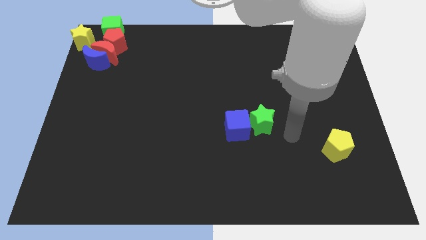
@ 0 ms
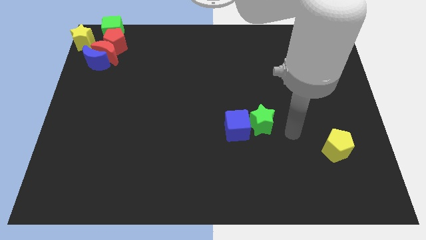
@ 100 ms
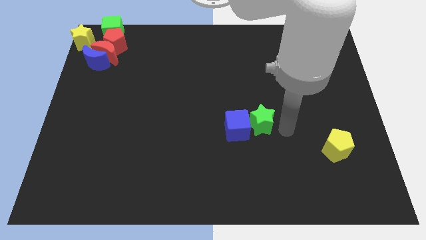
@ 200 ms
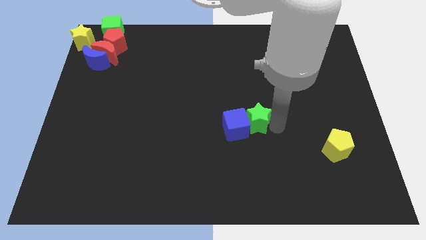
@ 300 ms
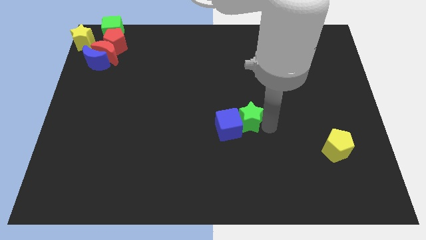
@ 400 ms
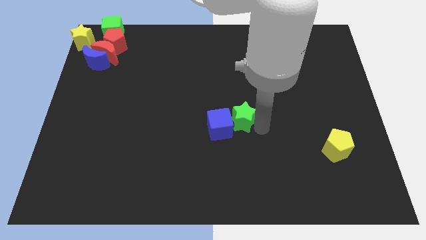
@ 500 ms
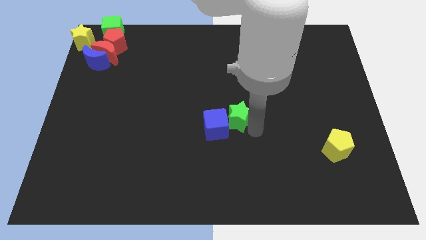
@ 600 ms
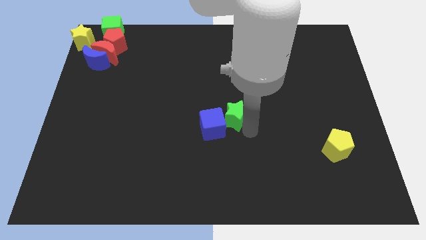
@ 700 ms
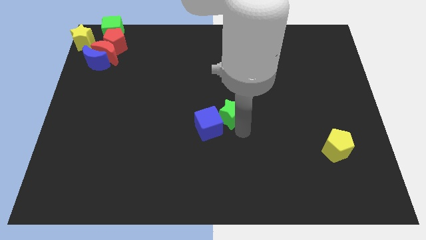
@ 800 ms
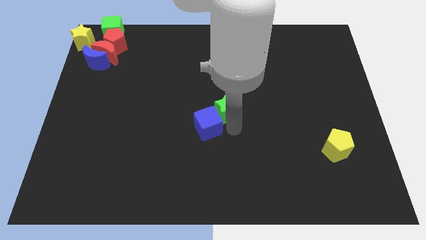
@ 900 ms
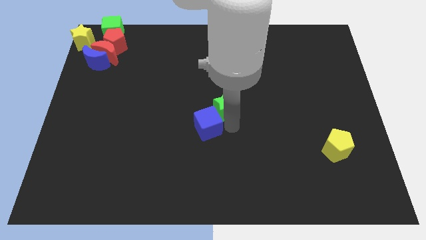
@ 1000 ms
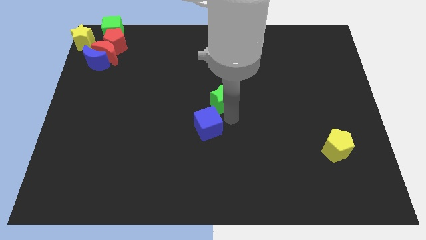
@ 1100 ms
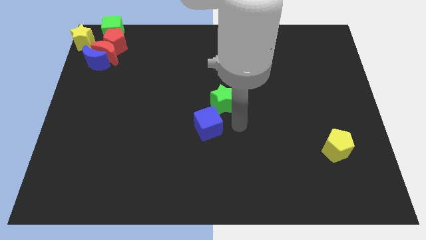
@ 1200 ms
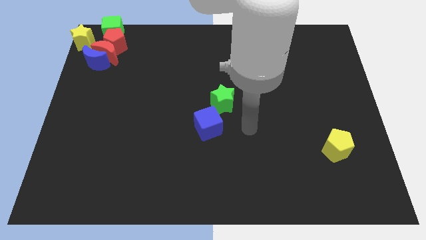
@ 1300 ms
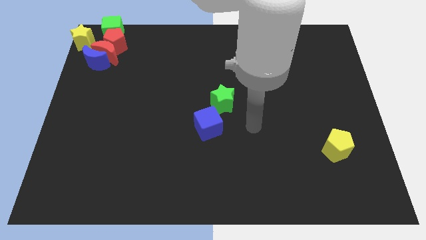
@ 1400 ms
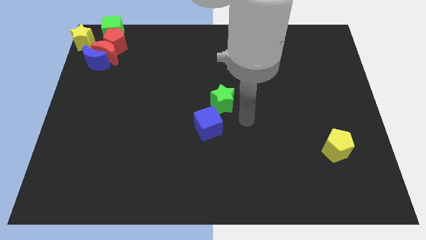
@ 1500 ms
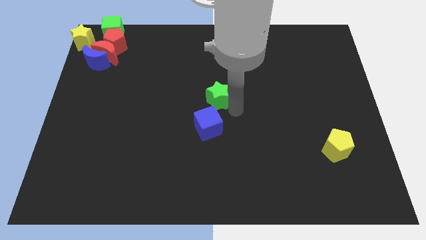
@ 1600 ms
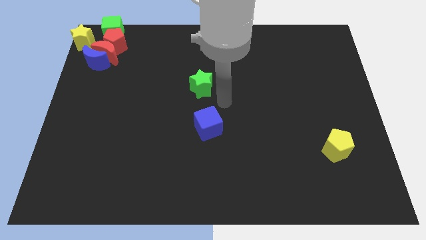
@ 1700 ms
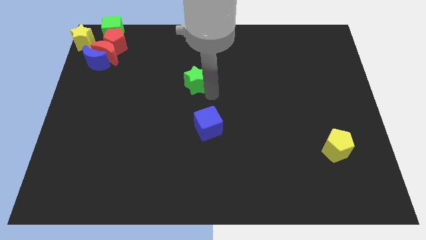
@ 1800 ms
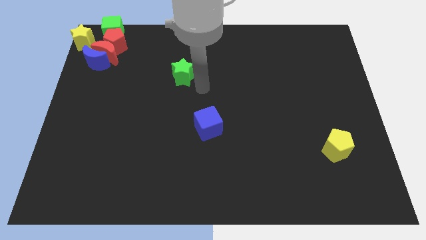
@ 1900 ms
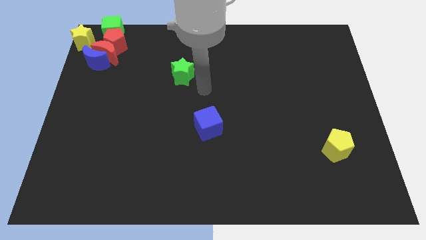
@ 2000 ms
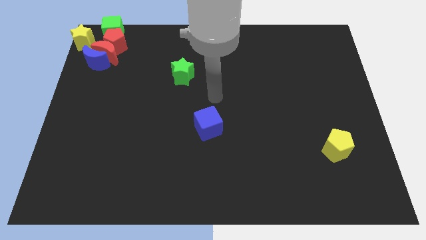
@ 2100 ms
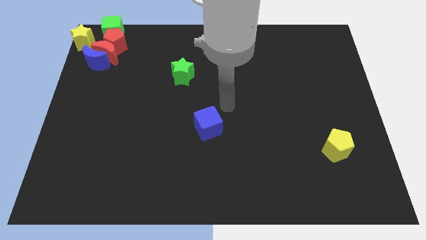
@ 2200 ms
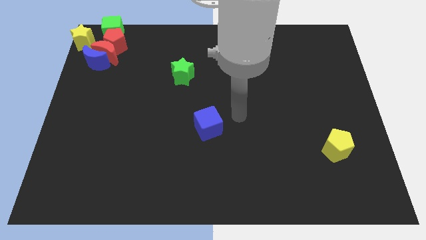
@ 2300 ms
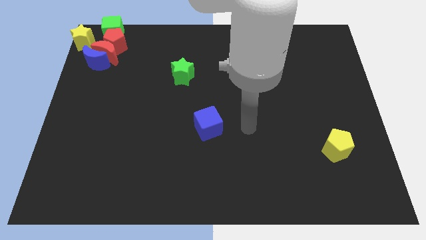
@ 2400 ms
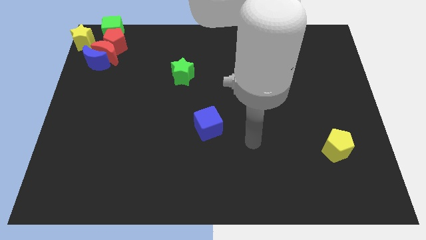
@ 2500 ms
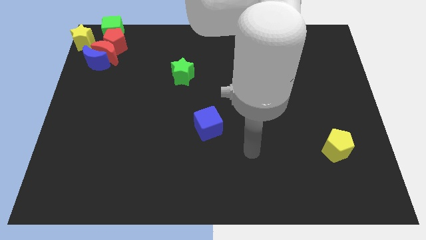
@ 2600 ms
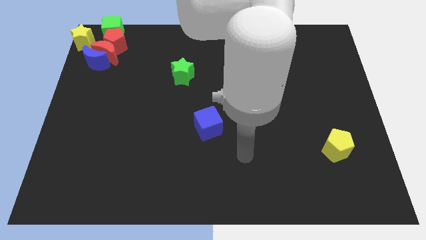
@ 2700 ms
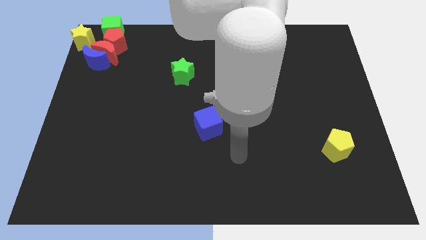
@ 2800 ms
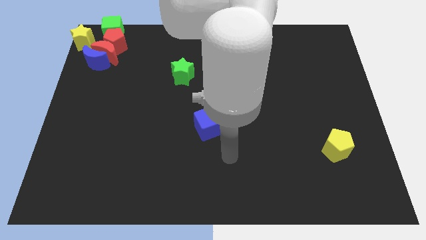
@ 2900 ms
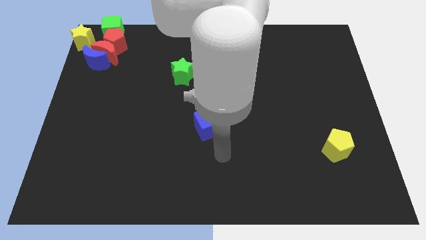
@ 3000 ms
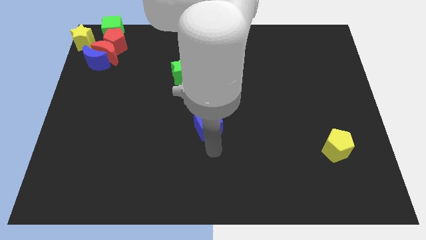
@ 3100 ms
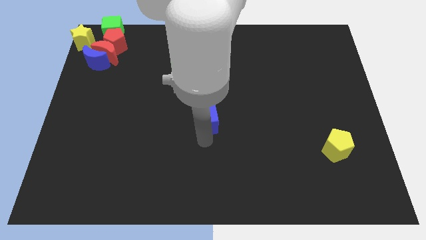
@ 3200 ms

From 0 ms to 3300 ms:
push the green star towards the top center of the board

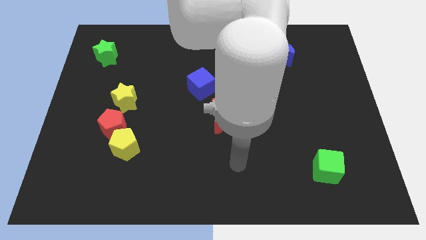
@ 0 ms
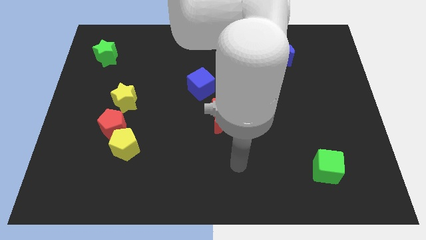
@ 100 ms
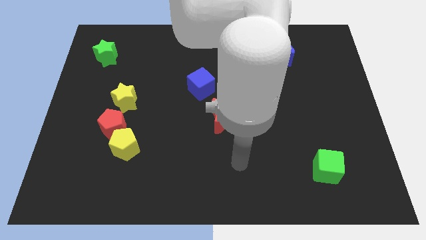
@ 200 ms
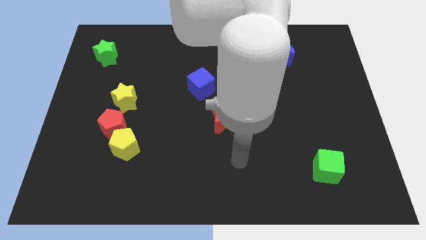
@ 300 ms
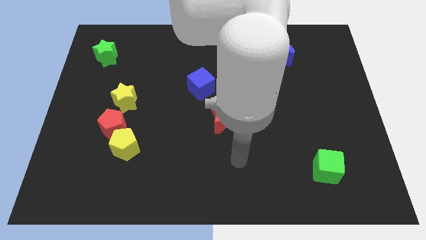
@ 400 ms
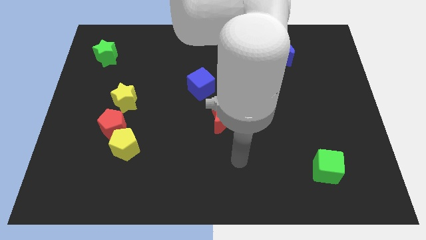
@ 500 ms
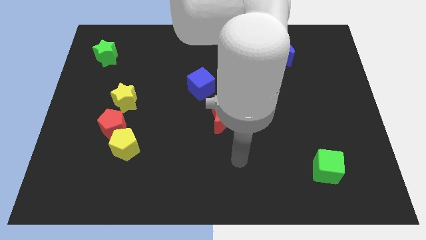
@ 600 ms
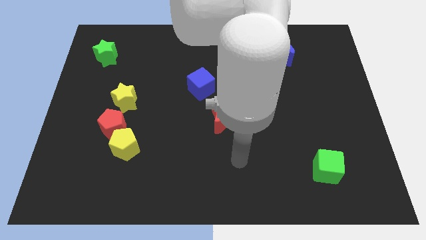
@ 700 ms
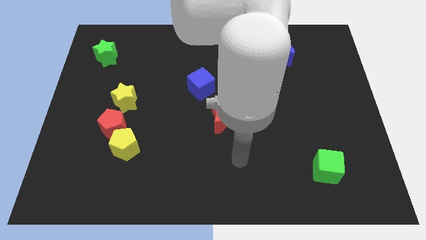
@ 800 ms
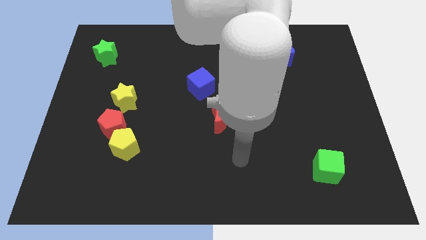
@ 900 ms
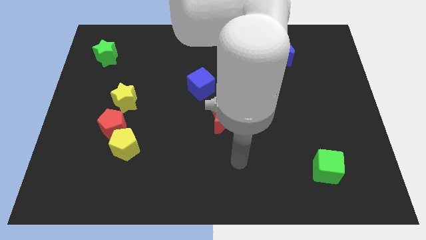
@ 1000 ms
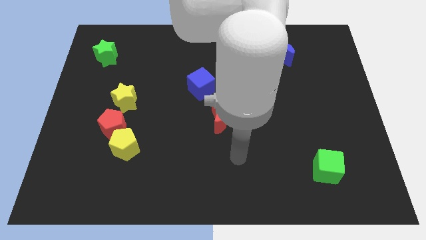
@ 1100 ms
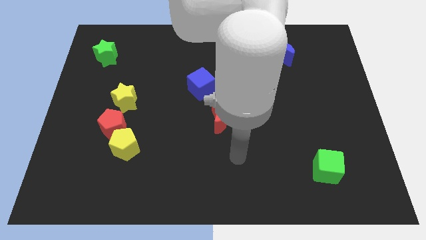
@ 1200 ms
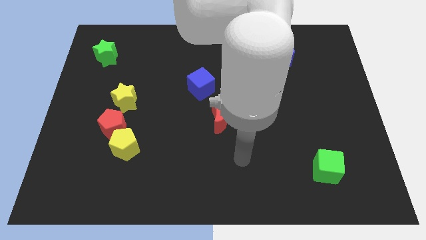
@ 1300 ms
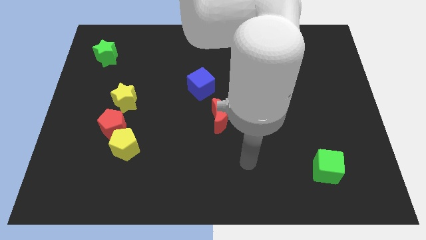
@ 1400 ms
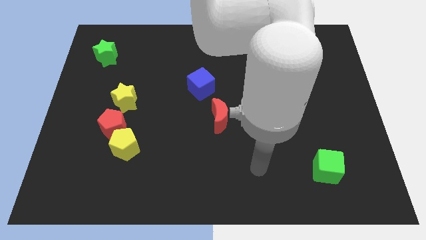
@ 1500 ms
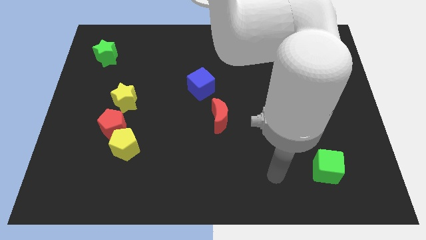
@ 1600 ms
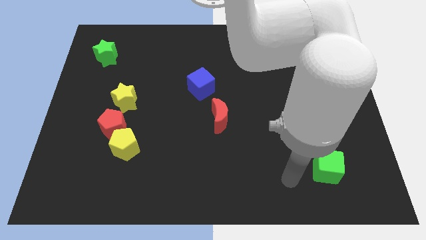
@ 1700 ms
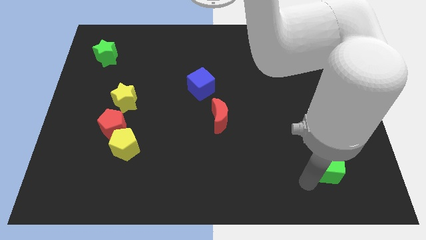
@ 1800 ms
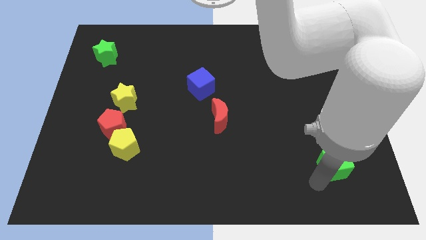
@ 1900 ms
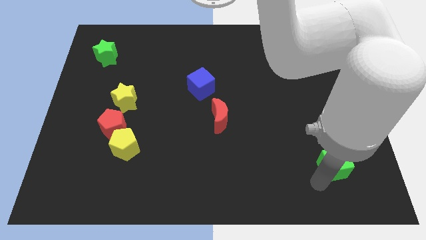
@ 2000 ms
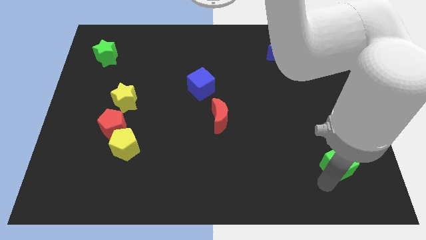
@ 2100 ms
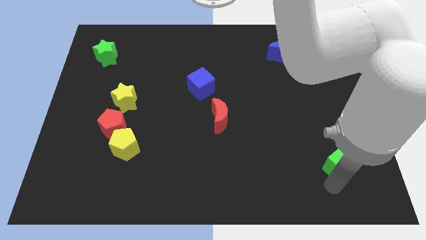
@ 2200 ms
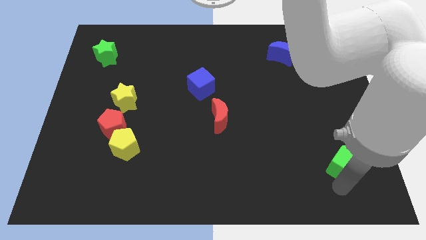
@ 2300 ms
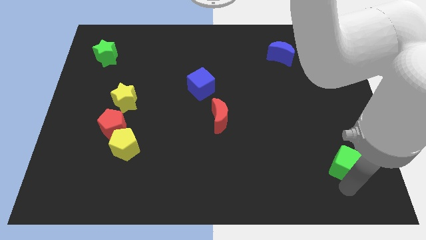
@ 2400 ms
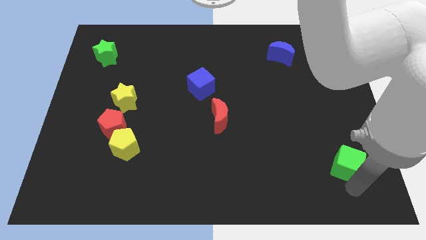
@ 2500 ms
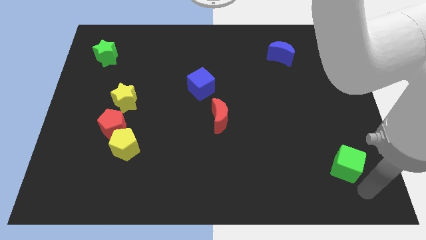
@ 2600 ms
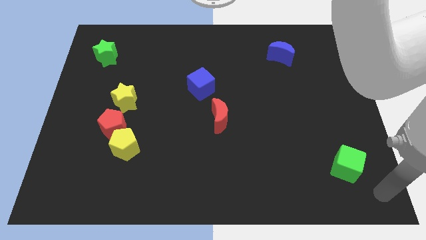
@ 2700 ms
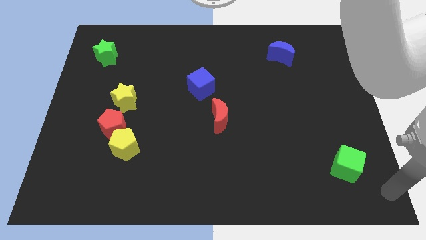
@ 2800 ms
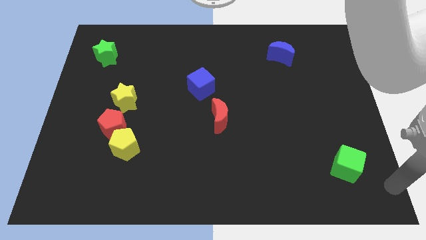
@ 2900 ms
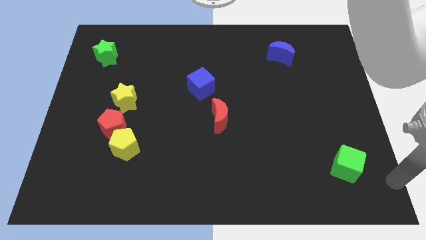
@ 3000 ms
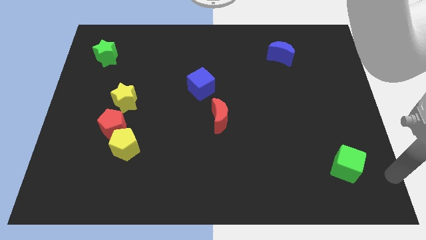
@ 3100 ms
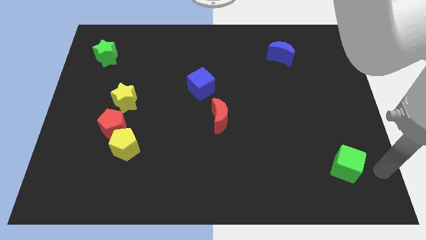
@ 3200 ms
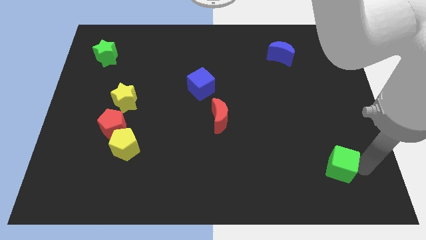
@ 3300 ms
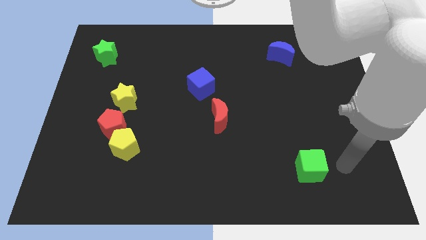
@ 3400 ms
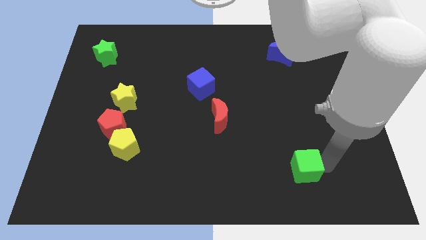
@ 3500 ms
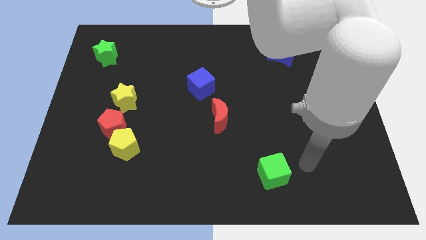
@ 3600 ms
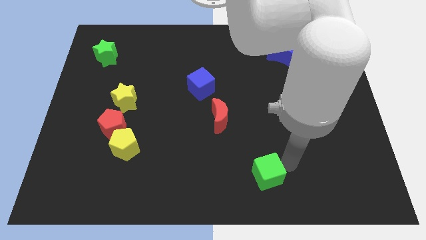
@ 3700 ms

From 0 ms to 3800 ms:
move green cube towards left side of the board

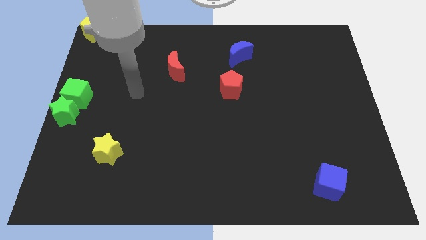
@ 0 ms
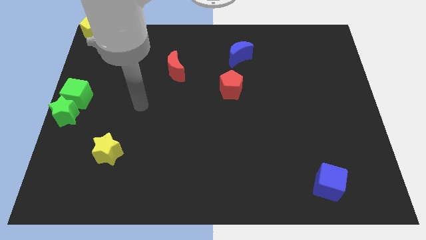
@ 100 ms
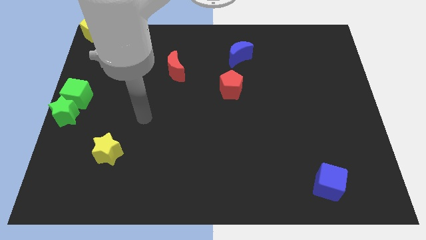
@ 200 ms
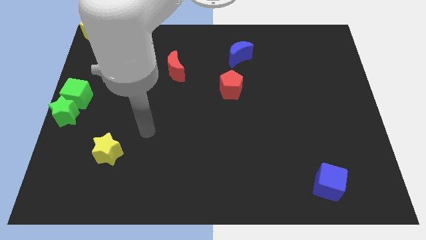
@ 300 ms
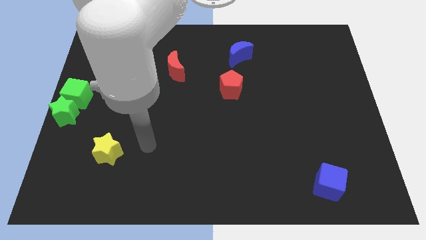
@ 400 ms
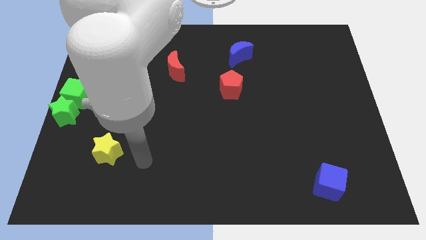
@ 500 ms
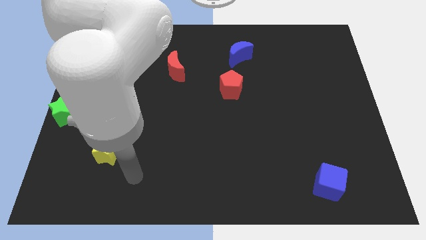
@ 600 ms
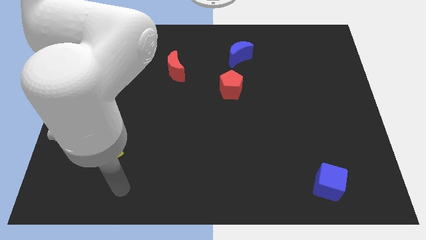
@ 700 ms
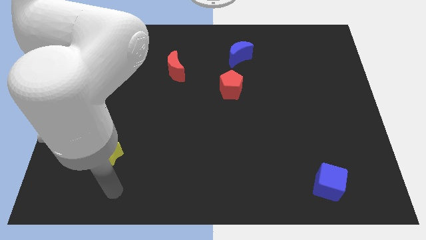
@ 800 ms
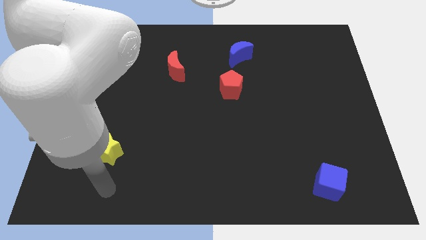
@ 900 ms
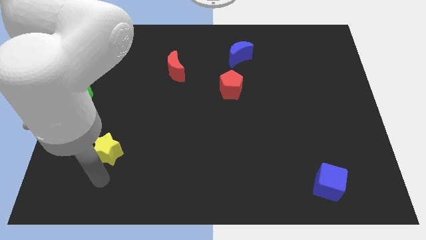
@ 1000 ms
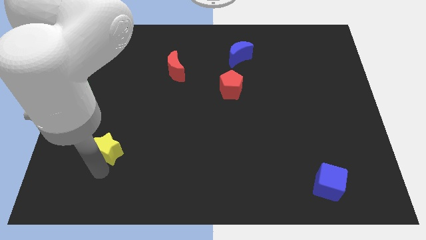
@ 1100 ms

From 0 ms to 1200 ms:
touch the yellow star

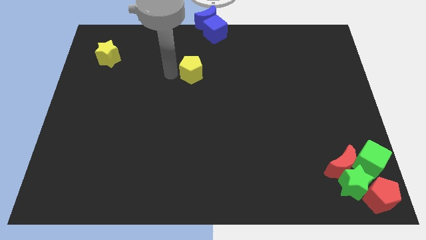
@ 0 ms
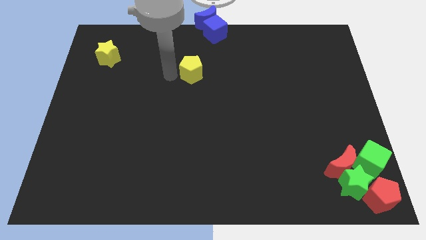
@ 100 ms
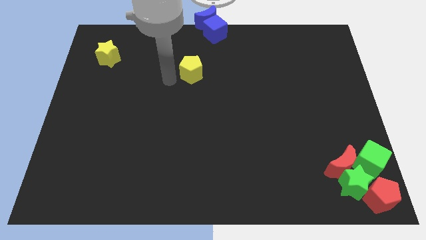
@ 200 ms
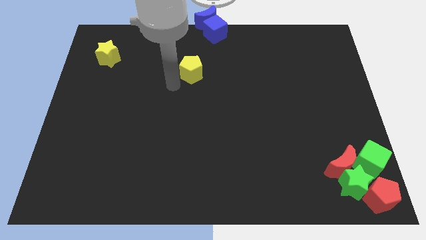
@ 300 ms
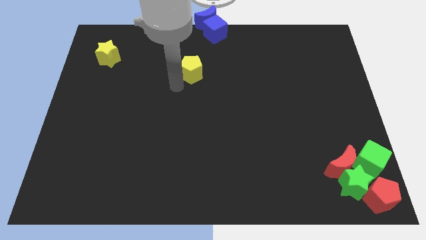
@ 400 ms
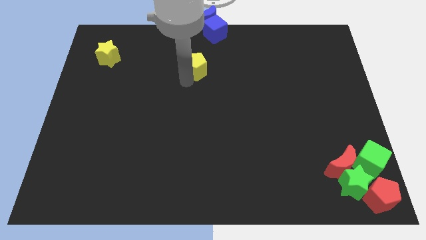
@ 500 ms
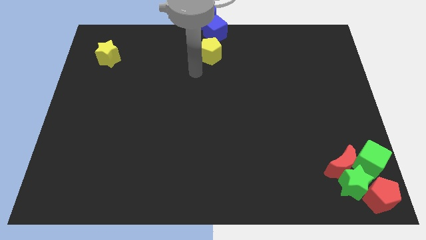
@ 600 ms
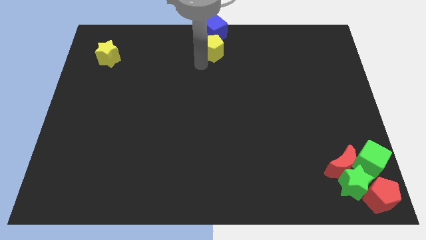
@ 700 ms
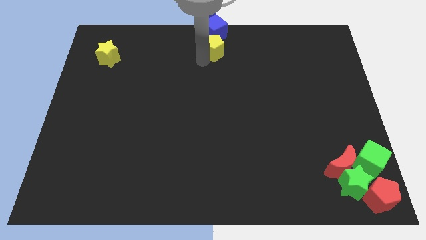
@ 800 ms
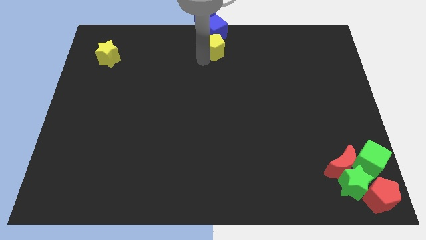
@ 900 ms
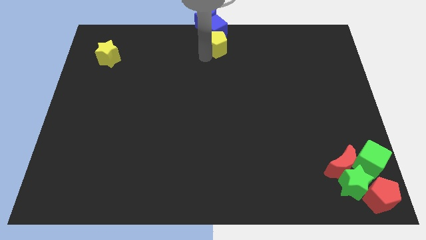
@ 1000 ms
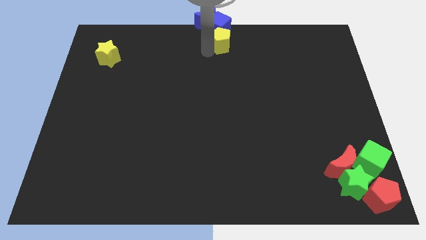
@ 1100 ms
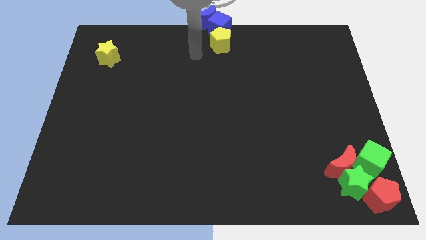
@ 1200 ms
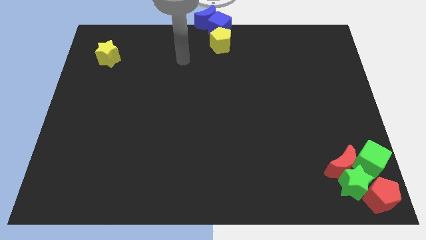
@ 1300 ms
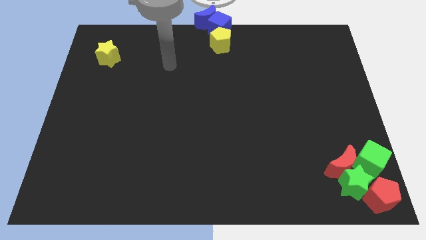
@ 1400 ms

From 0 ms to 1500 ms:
push the yellow pentagon into blue cube
